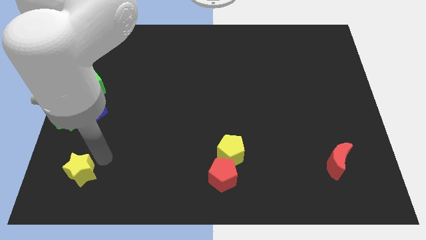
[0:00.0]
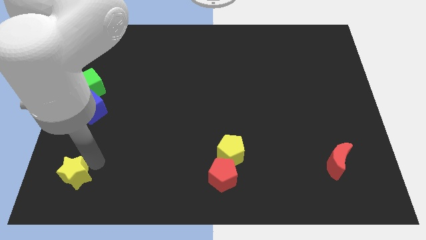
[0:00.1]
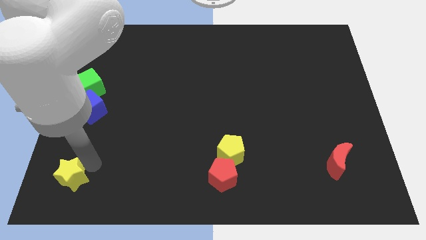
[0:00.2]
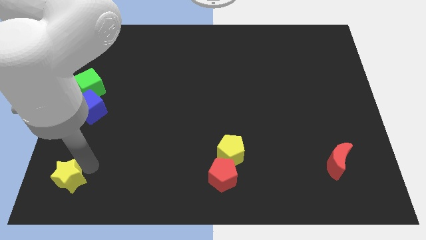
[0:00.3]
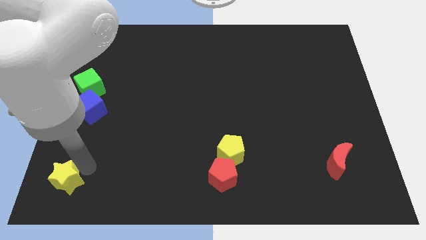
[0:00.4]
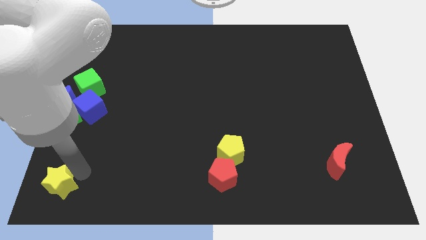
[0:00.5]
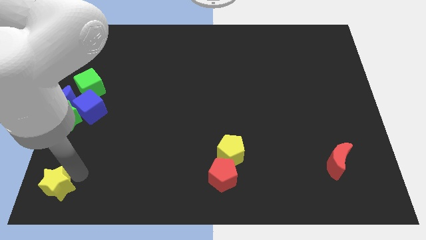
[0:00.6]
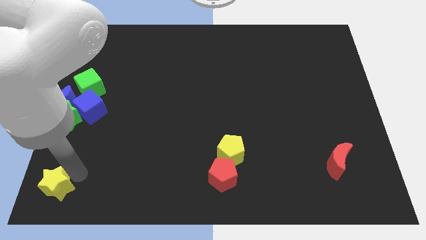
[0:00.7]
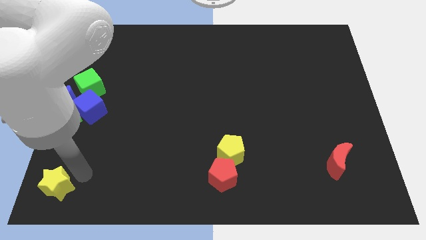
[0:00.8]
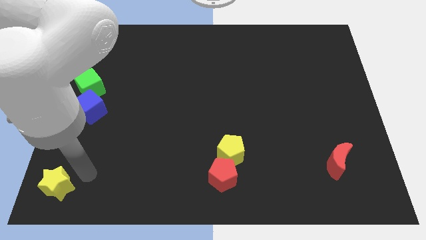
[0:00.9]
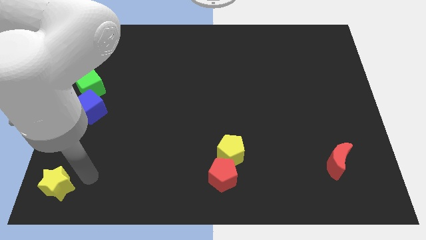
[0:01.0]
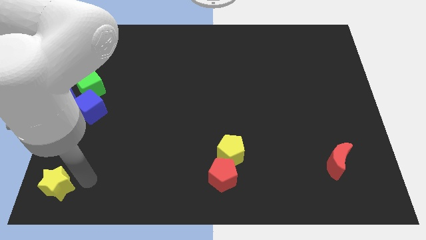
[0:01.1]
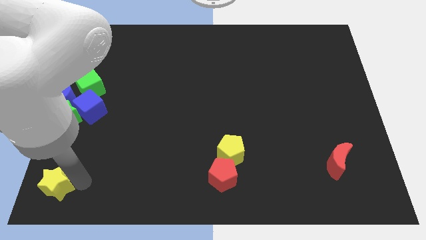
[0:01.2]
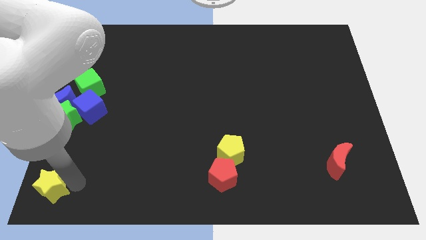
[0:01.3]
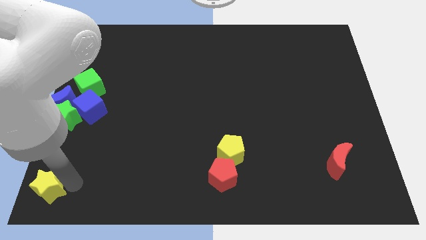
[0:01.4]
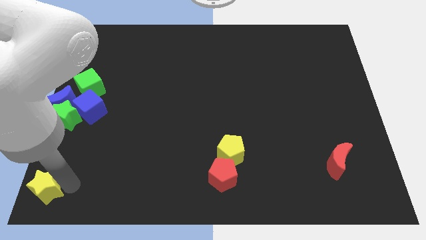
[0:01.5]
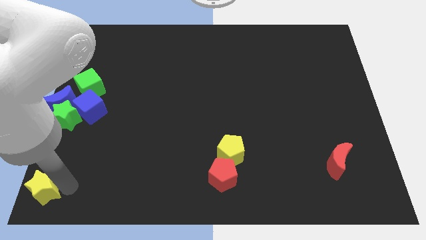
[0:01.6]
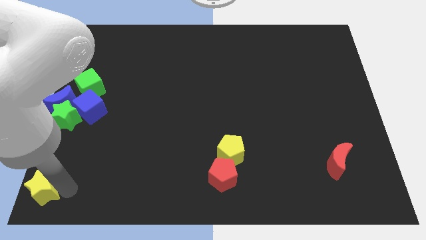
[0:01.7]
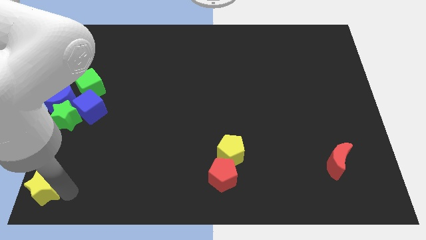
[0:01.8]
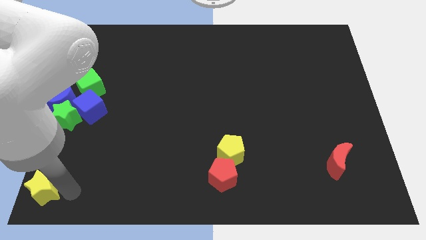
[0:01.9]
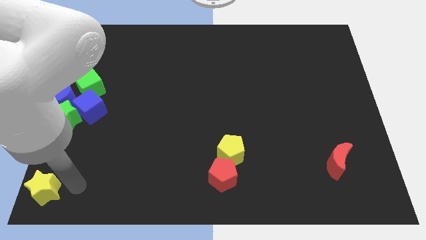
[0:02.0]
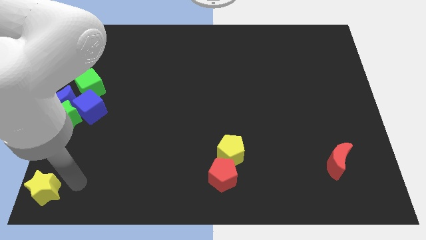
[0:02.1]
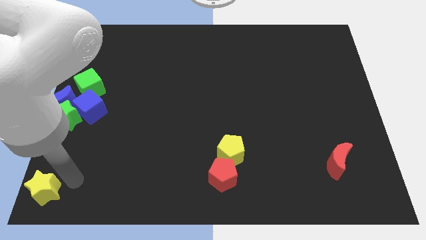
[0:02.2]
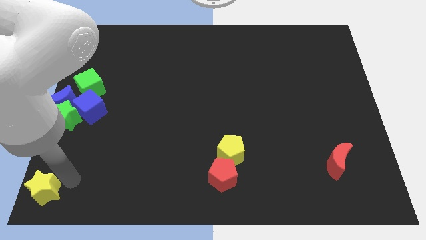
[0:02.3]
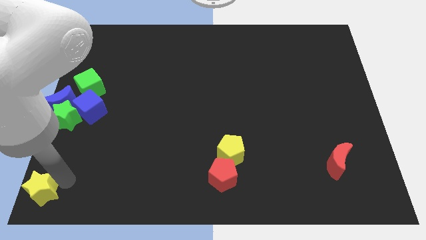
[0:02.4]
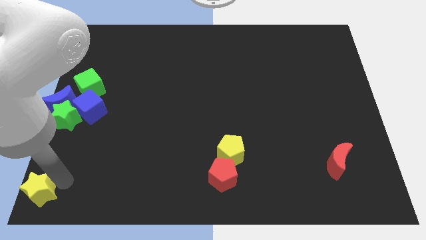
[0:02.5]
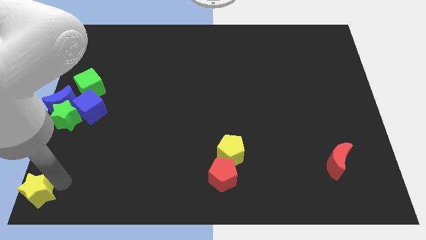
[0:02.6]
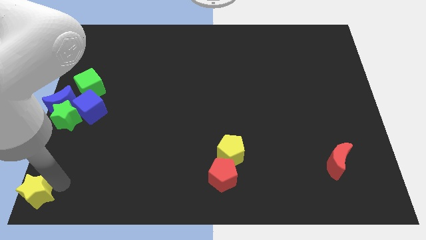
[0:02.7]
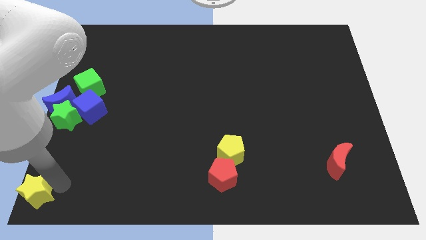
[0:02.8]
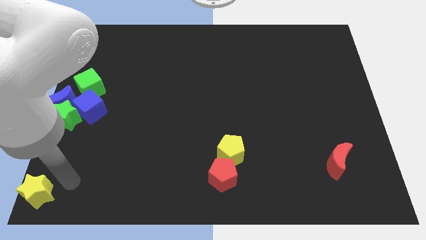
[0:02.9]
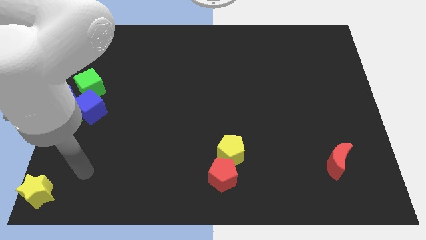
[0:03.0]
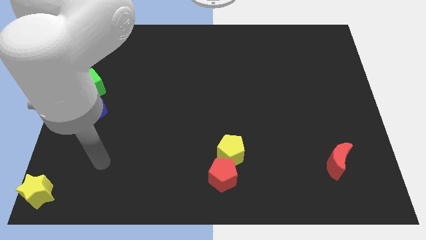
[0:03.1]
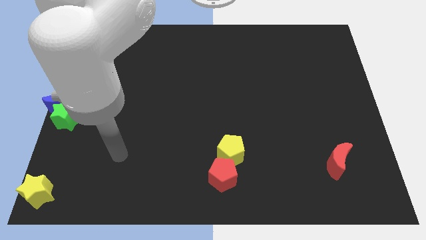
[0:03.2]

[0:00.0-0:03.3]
put the yellow star to the bottom left corner of the board

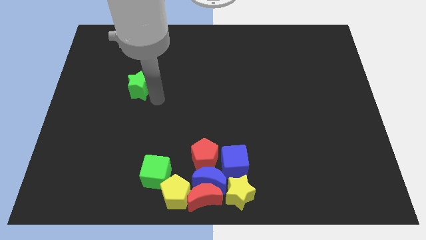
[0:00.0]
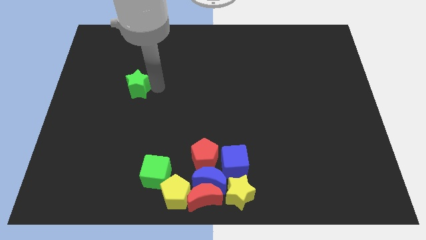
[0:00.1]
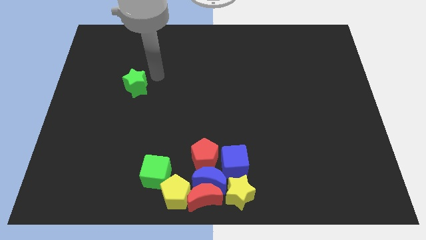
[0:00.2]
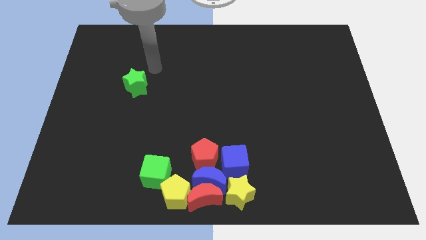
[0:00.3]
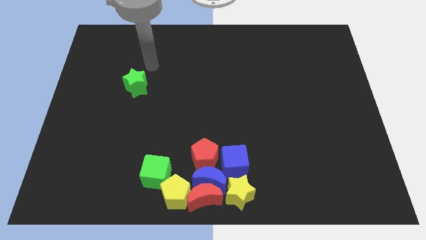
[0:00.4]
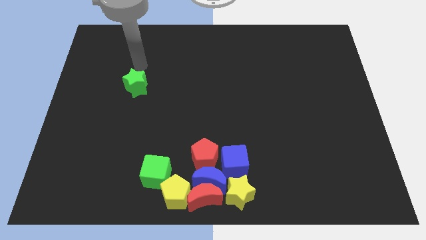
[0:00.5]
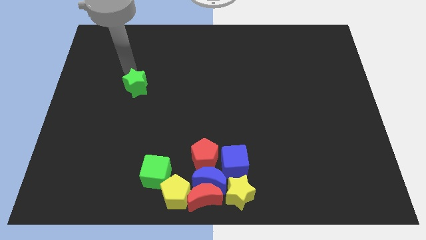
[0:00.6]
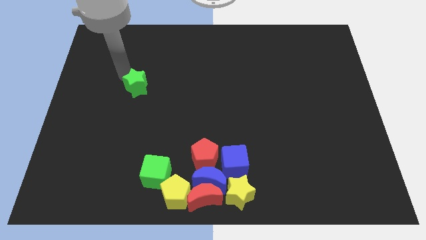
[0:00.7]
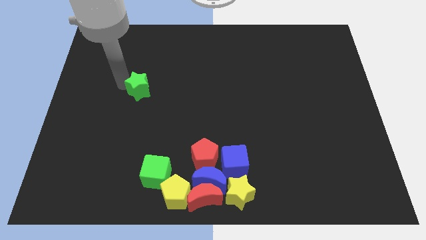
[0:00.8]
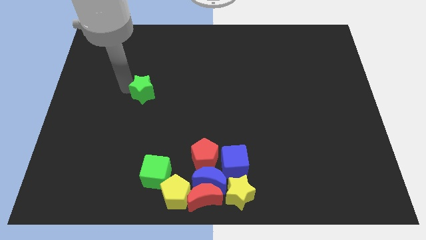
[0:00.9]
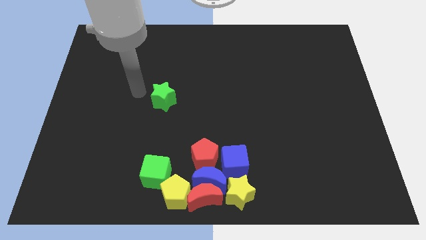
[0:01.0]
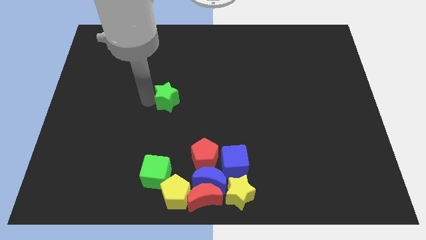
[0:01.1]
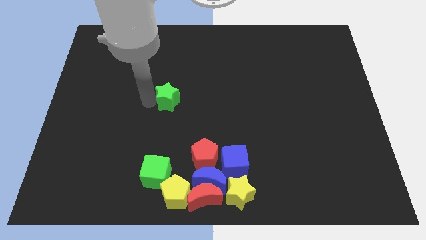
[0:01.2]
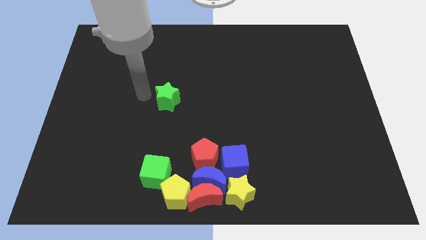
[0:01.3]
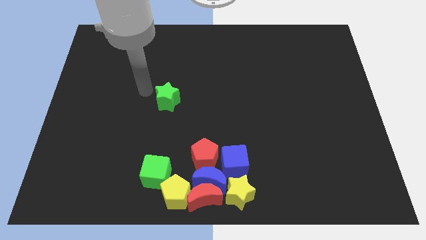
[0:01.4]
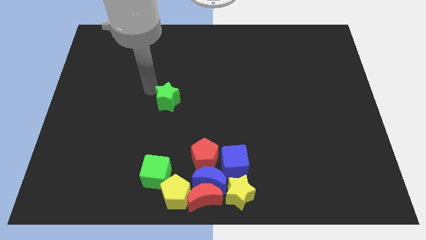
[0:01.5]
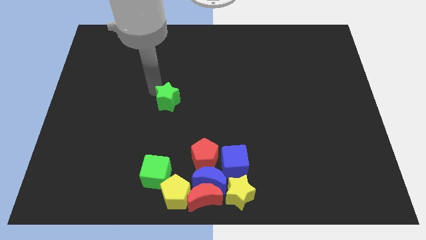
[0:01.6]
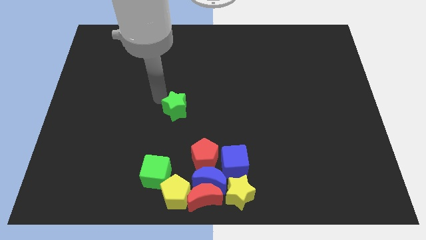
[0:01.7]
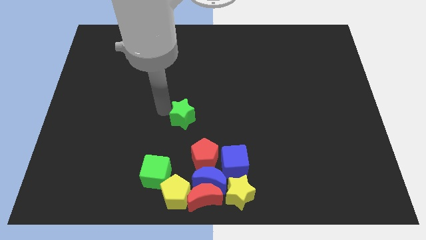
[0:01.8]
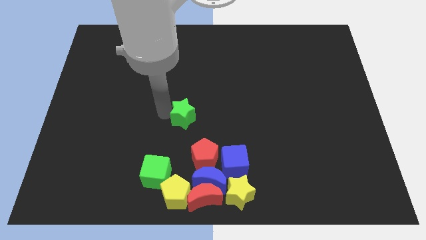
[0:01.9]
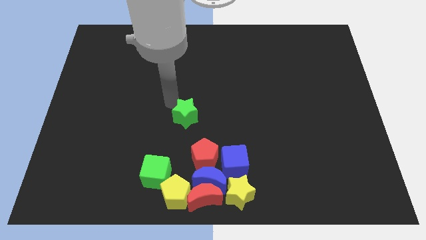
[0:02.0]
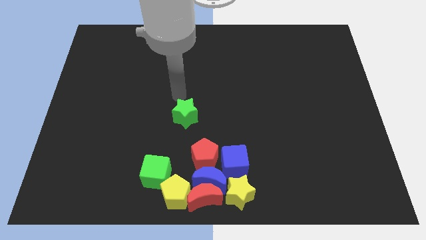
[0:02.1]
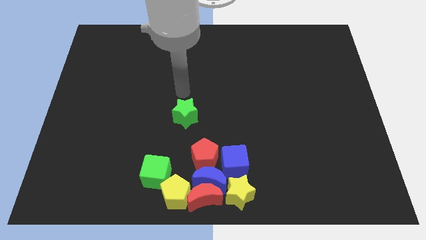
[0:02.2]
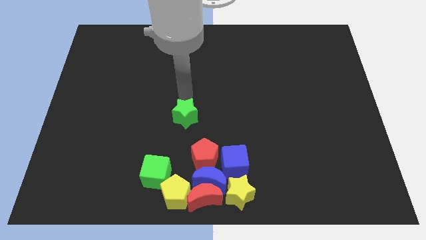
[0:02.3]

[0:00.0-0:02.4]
place the green star ahead left to the red pentagon

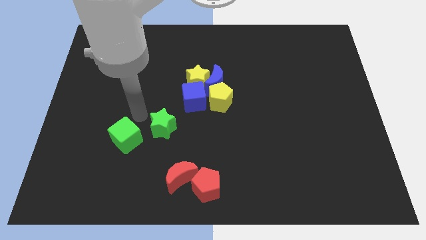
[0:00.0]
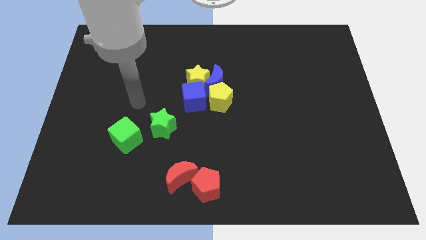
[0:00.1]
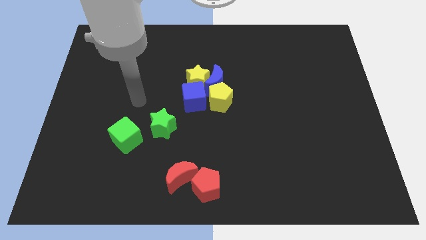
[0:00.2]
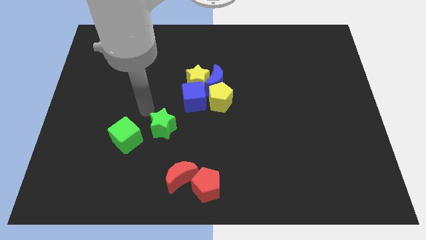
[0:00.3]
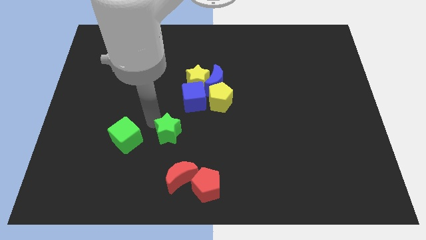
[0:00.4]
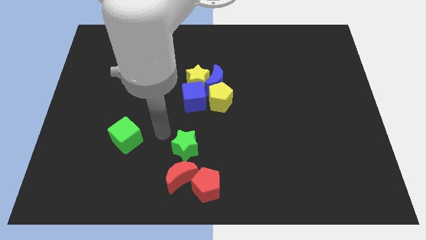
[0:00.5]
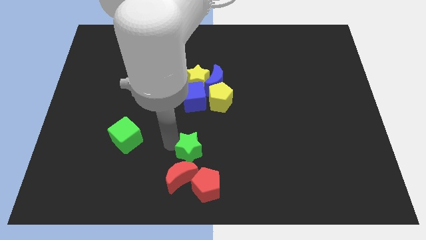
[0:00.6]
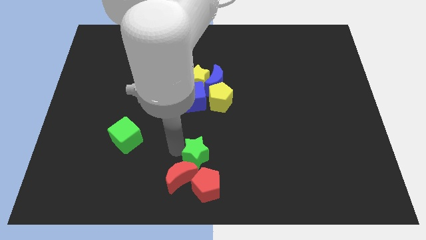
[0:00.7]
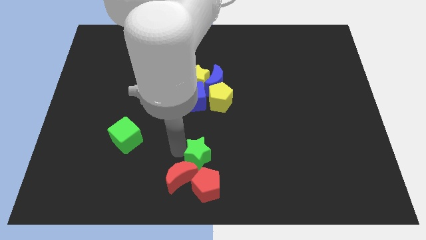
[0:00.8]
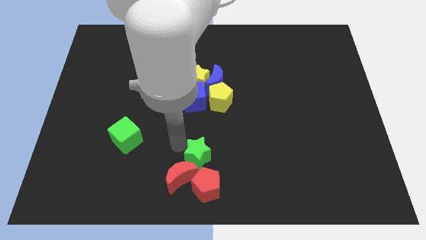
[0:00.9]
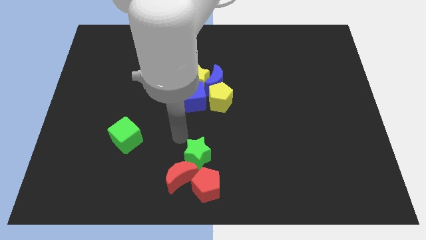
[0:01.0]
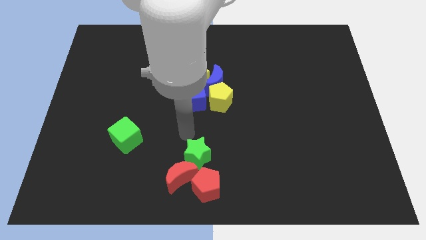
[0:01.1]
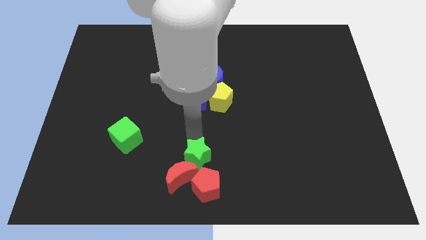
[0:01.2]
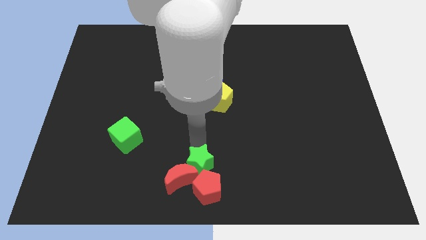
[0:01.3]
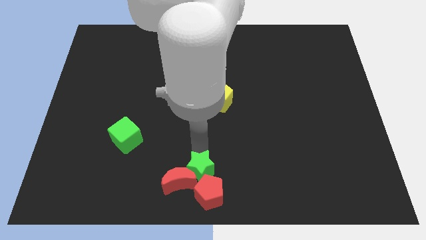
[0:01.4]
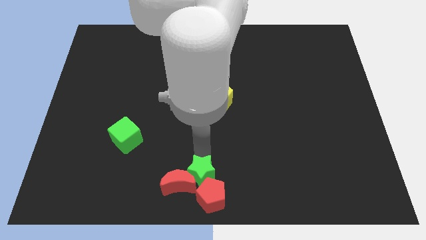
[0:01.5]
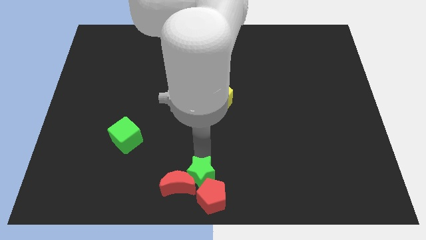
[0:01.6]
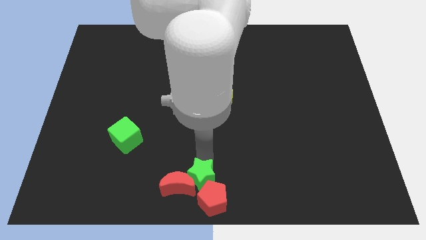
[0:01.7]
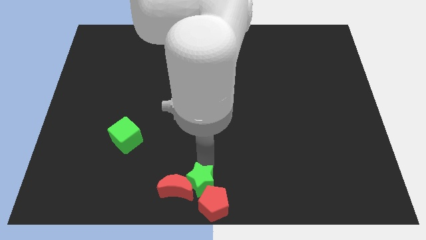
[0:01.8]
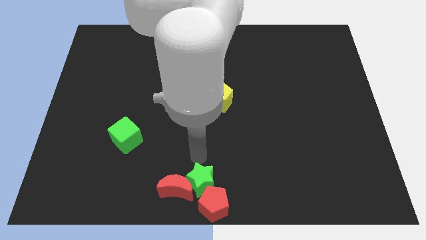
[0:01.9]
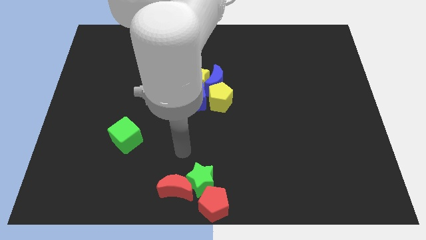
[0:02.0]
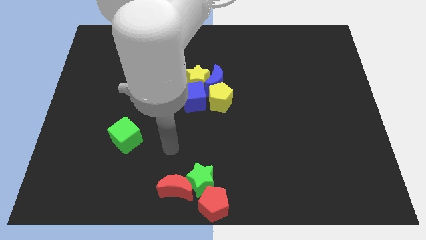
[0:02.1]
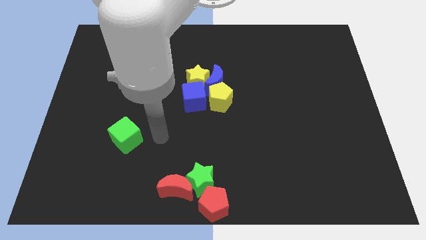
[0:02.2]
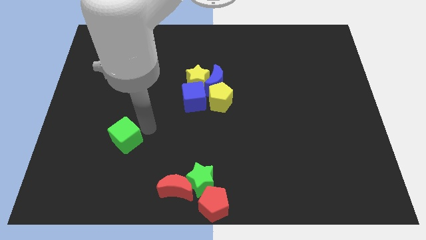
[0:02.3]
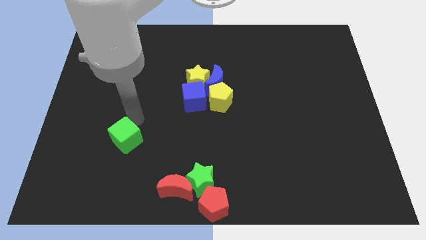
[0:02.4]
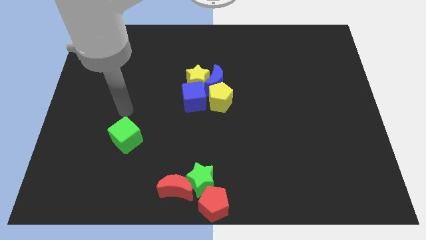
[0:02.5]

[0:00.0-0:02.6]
place the green star between red moon and red pentagon
